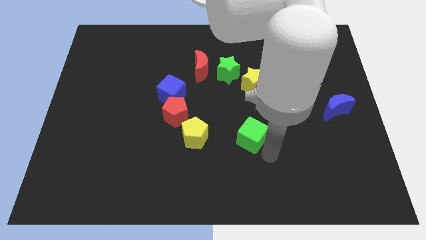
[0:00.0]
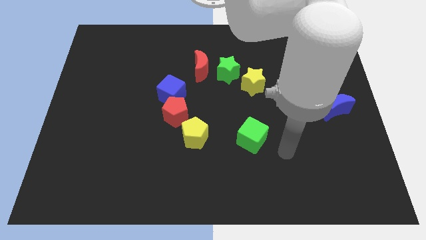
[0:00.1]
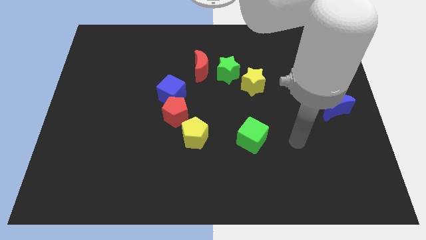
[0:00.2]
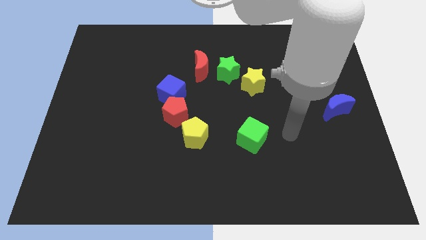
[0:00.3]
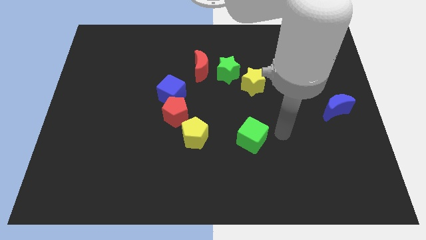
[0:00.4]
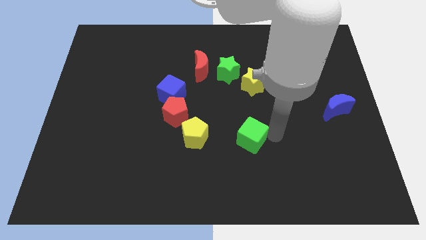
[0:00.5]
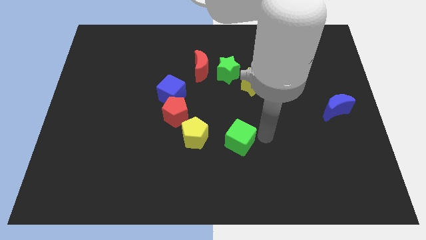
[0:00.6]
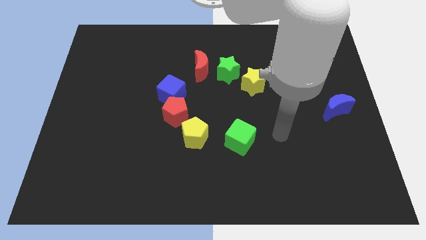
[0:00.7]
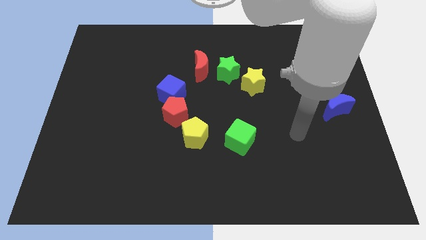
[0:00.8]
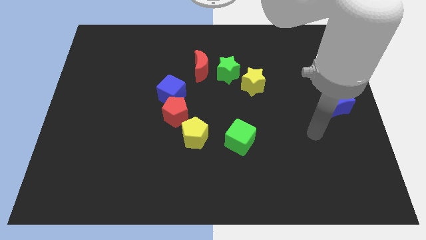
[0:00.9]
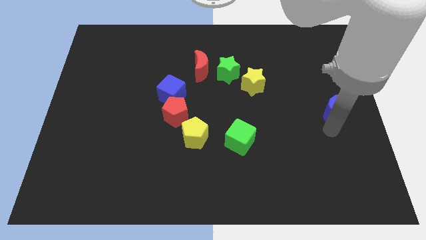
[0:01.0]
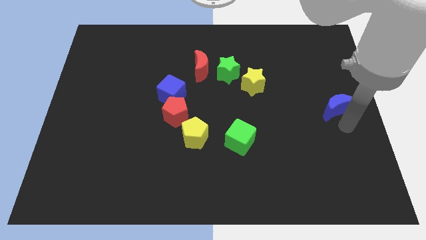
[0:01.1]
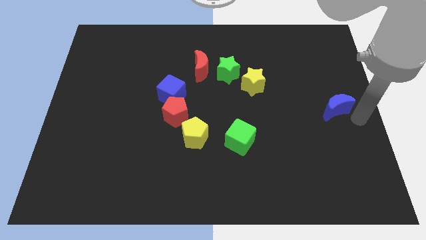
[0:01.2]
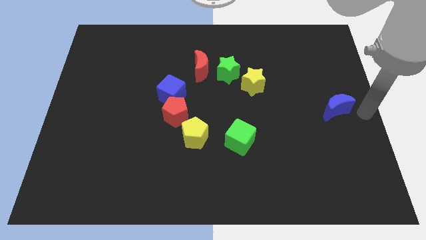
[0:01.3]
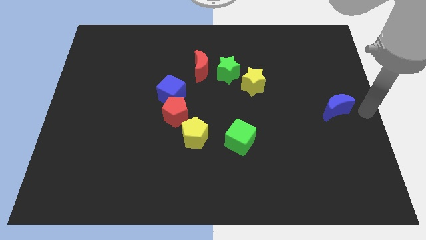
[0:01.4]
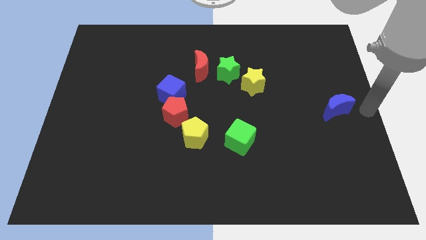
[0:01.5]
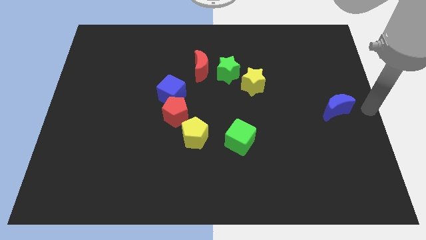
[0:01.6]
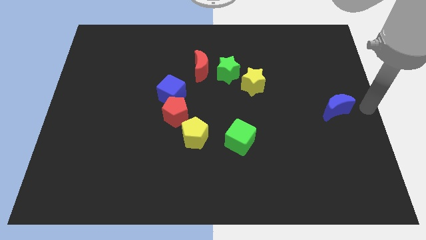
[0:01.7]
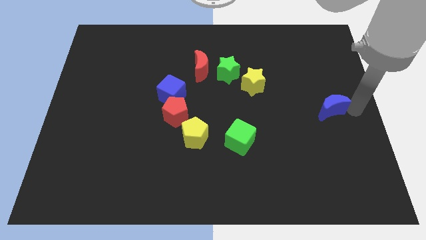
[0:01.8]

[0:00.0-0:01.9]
place your hand at the right side of the blue moon

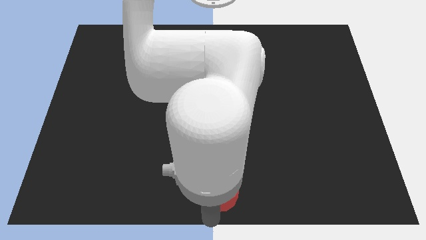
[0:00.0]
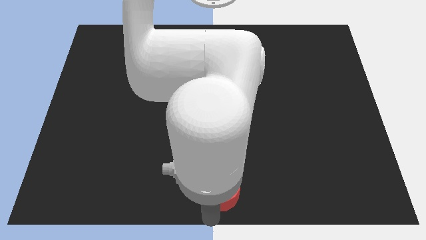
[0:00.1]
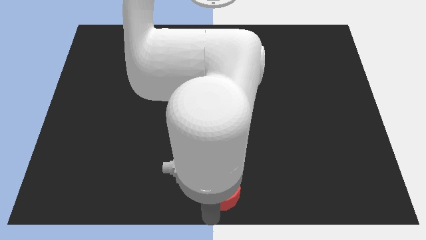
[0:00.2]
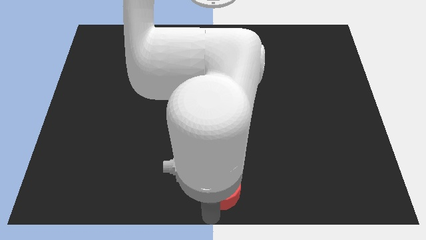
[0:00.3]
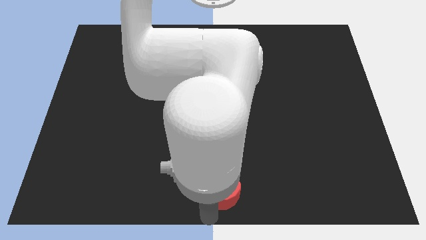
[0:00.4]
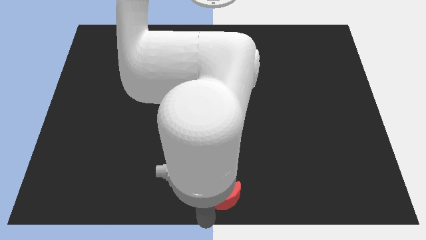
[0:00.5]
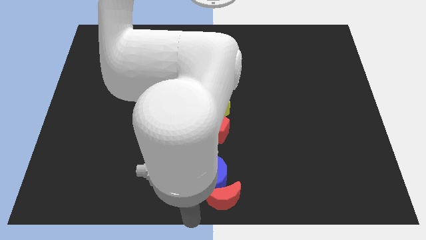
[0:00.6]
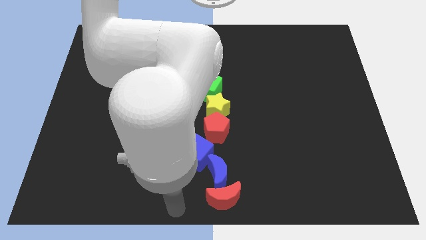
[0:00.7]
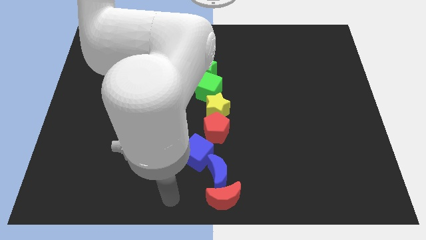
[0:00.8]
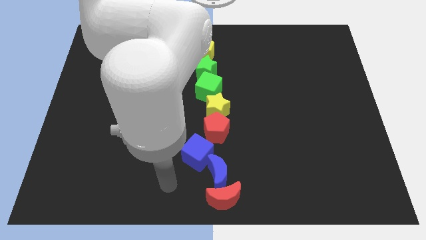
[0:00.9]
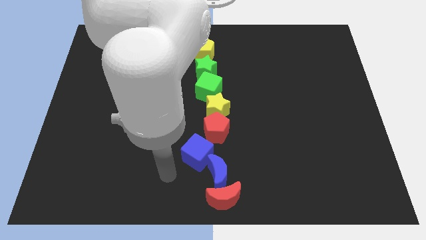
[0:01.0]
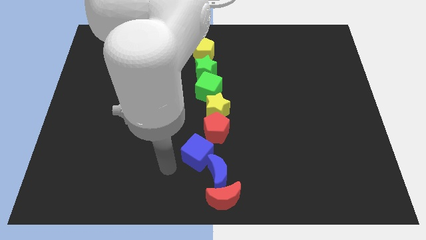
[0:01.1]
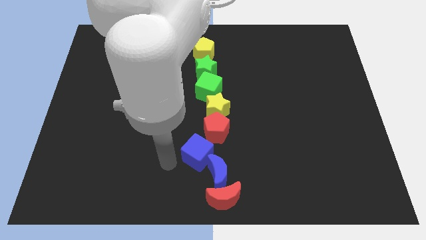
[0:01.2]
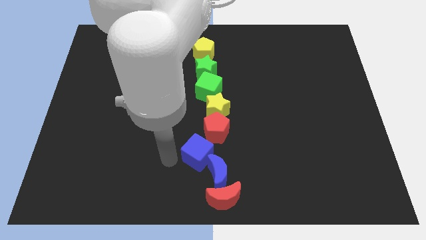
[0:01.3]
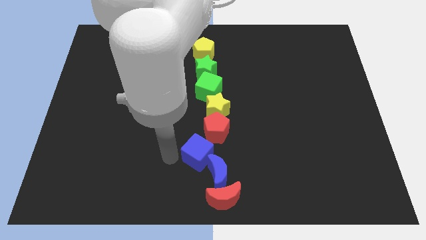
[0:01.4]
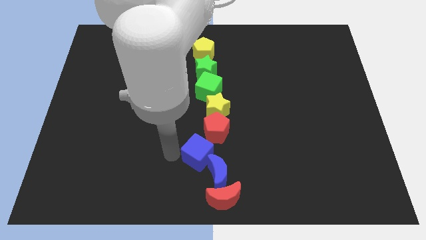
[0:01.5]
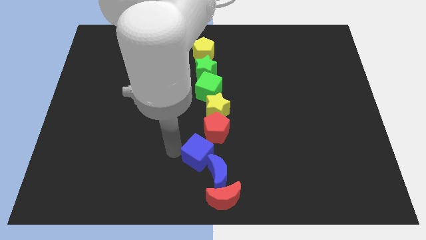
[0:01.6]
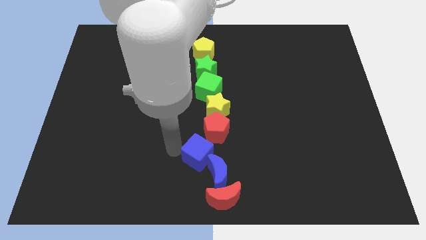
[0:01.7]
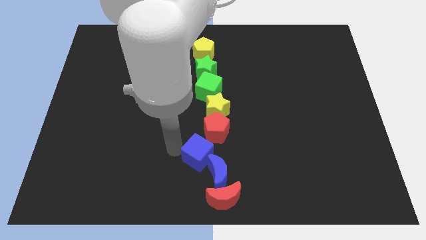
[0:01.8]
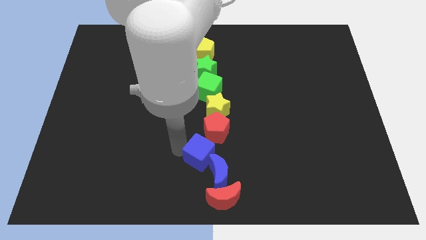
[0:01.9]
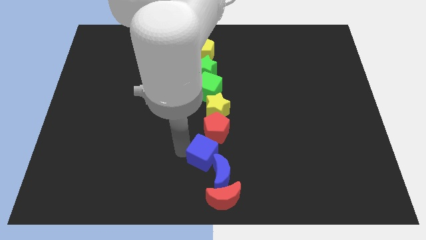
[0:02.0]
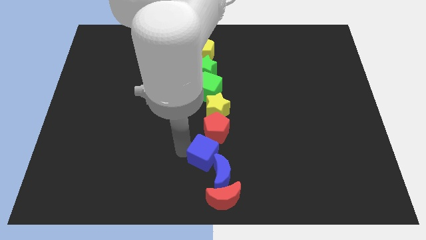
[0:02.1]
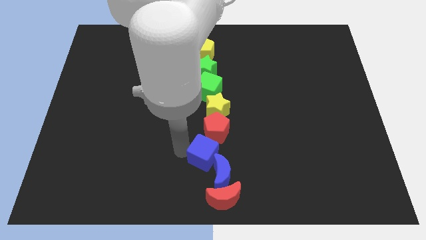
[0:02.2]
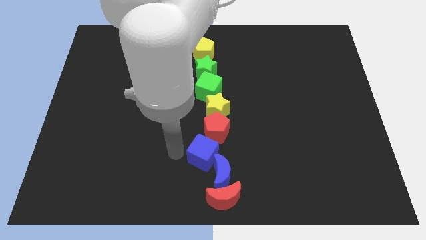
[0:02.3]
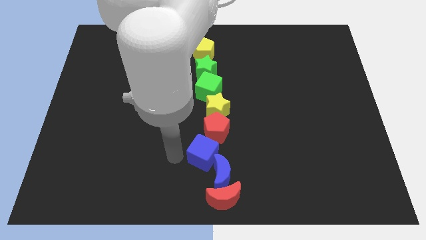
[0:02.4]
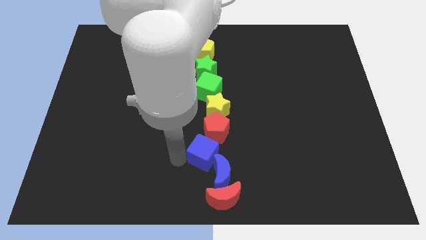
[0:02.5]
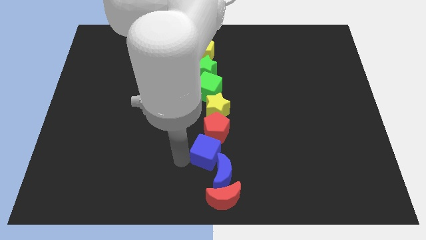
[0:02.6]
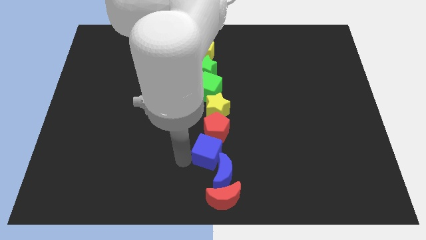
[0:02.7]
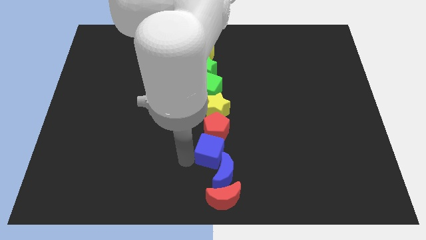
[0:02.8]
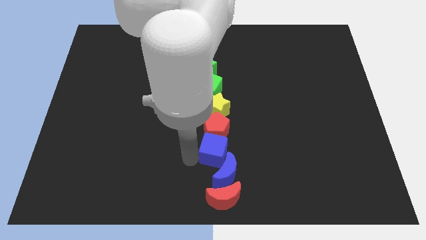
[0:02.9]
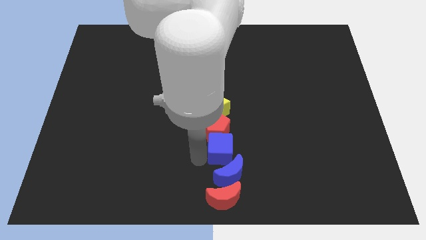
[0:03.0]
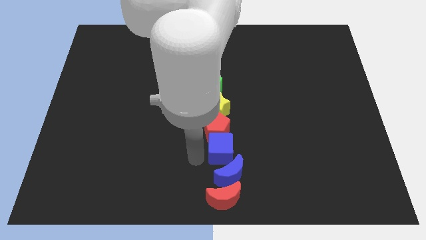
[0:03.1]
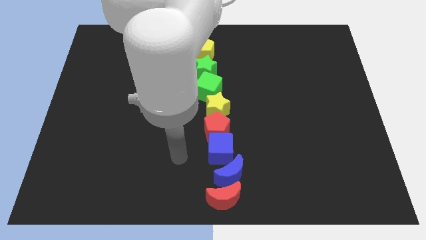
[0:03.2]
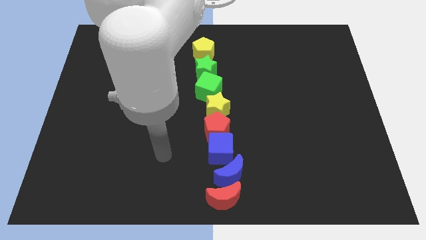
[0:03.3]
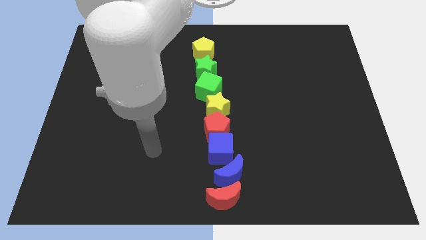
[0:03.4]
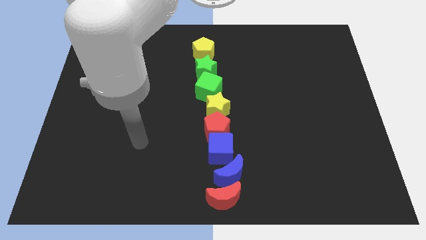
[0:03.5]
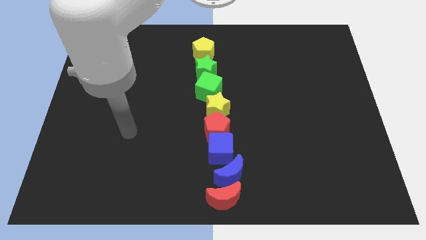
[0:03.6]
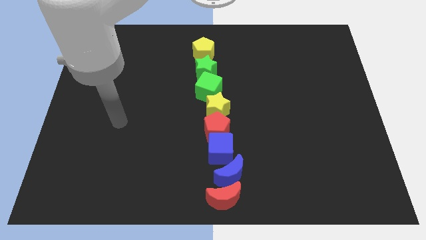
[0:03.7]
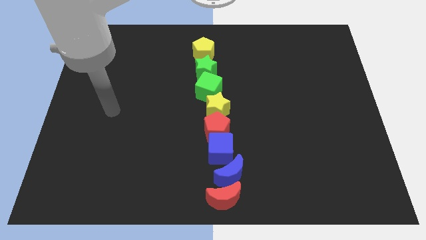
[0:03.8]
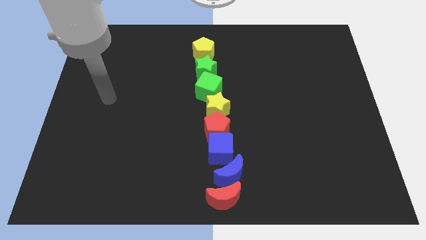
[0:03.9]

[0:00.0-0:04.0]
adjust the blue blocks to make vertical line

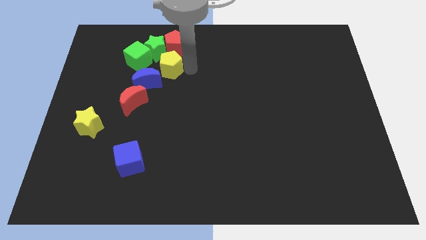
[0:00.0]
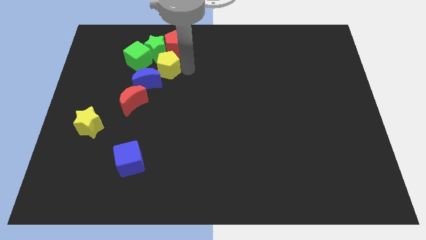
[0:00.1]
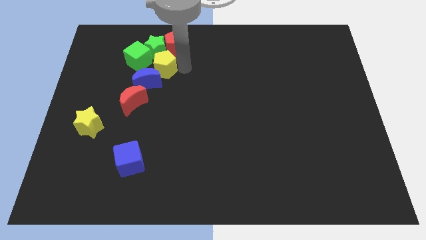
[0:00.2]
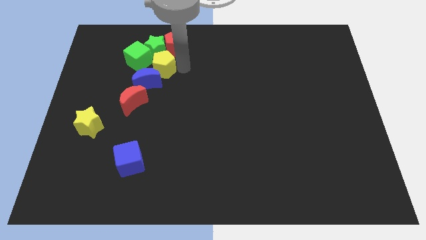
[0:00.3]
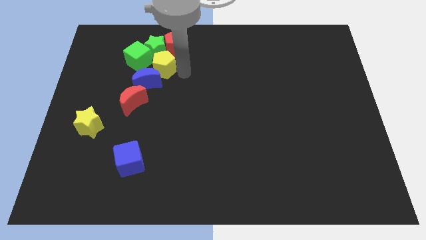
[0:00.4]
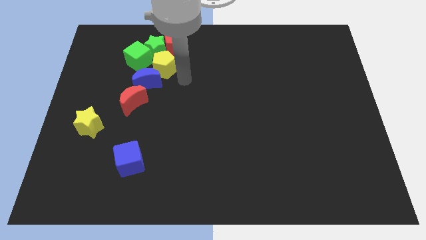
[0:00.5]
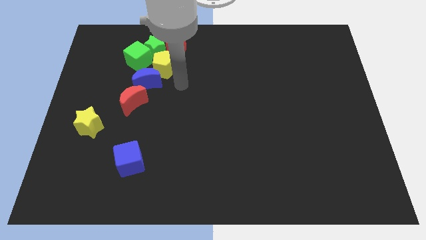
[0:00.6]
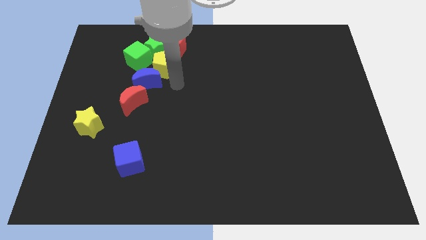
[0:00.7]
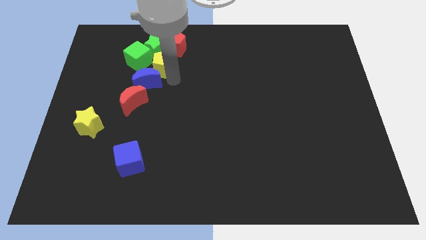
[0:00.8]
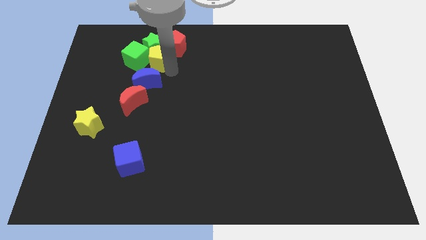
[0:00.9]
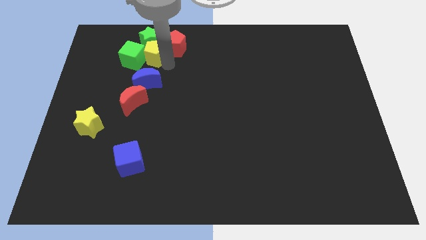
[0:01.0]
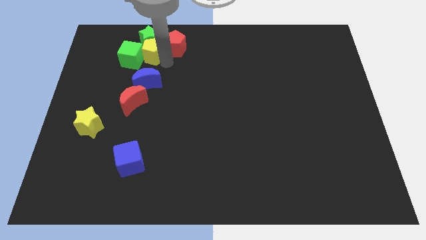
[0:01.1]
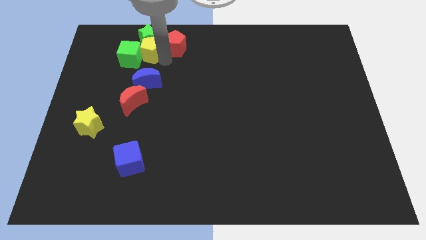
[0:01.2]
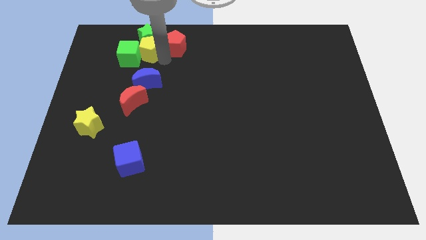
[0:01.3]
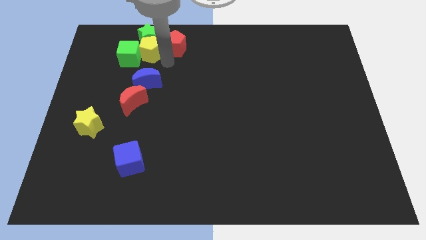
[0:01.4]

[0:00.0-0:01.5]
move the yellow pentagon into the green star

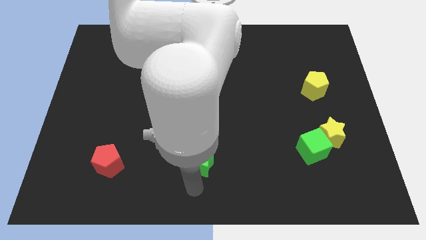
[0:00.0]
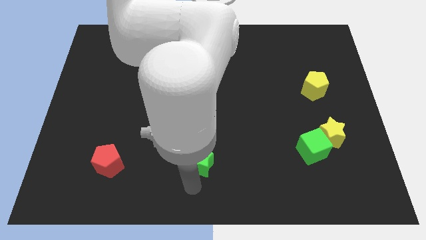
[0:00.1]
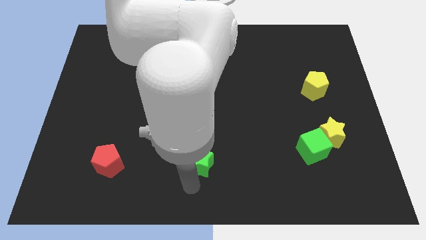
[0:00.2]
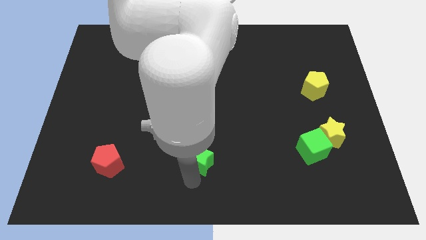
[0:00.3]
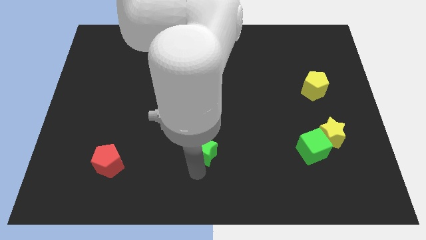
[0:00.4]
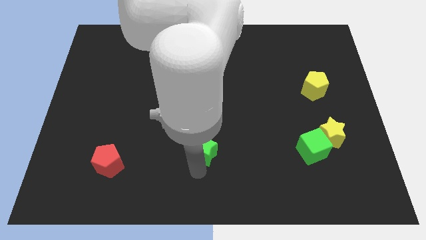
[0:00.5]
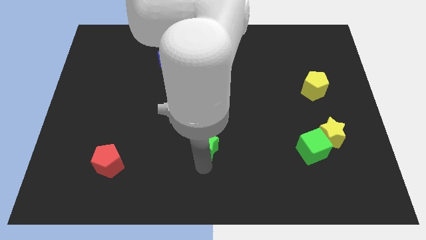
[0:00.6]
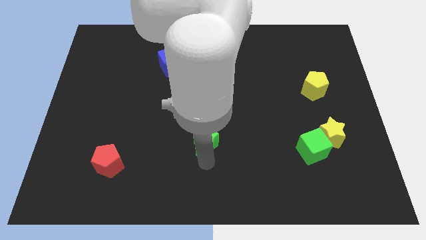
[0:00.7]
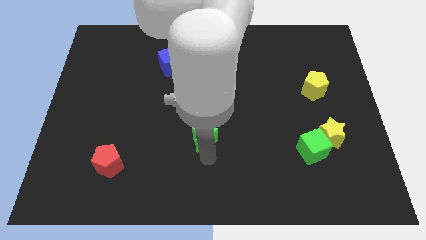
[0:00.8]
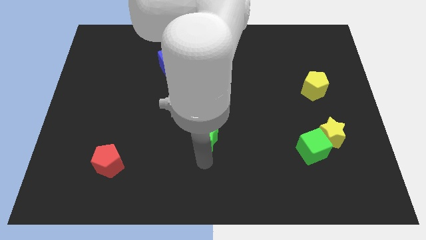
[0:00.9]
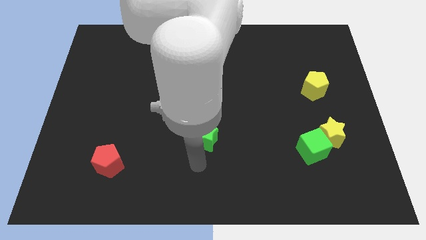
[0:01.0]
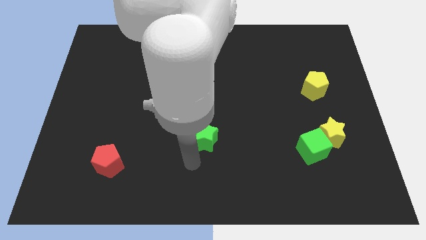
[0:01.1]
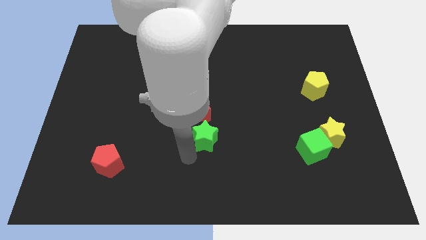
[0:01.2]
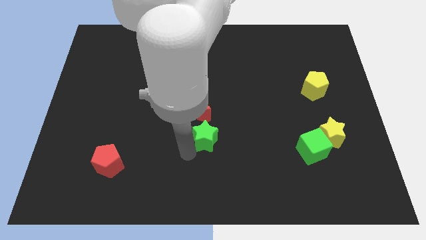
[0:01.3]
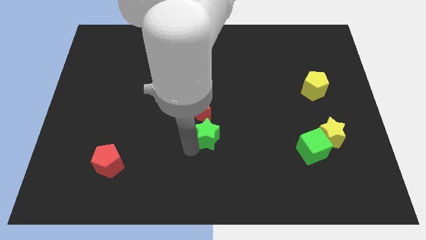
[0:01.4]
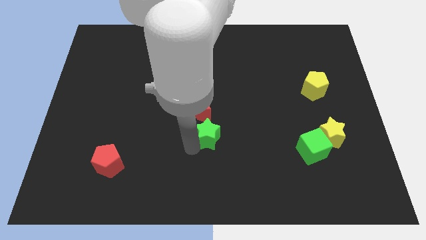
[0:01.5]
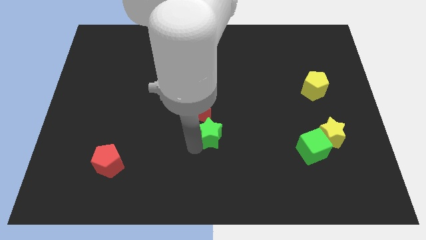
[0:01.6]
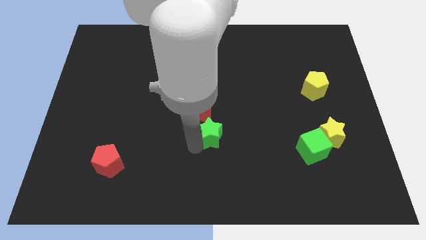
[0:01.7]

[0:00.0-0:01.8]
push the green star to the bottom of the red moon
